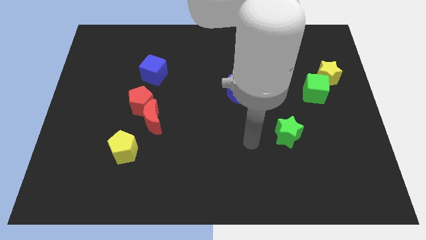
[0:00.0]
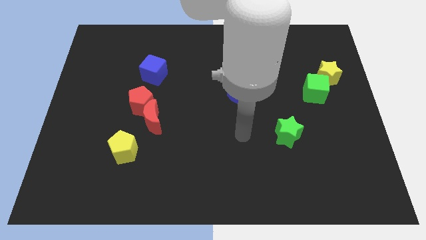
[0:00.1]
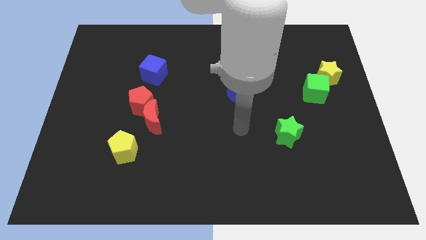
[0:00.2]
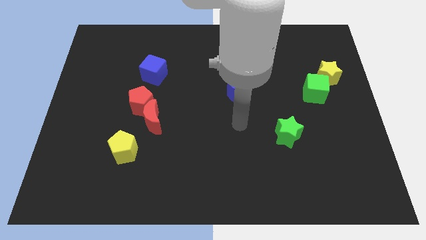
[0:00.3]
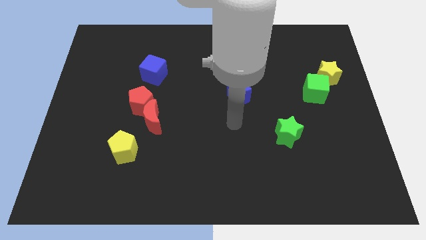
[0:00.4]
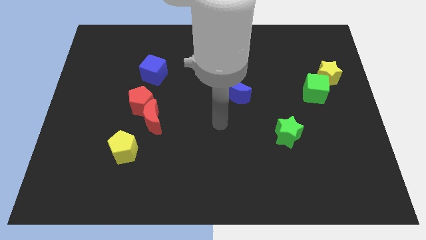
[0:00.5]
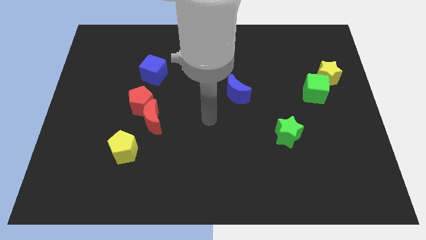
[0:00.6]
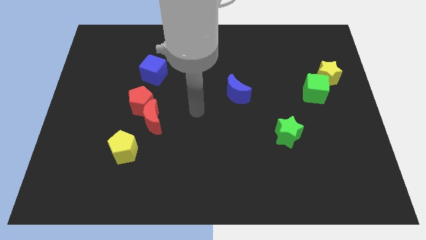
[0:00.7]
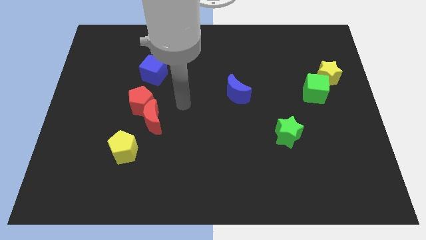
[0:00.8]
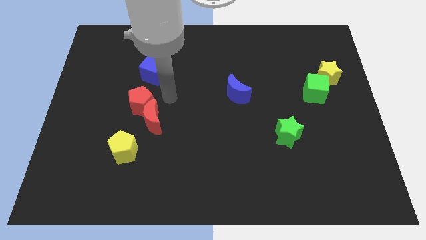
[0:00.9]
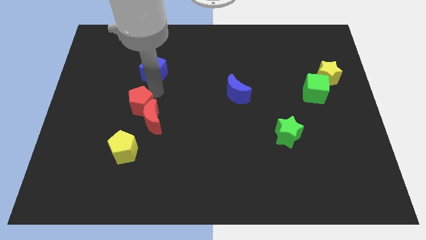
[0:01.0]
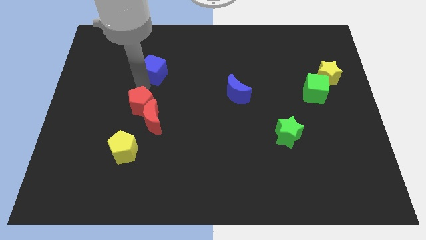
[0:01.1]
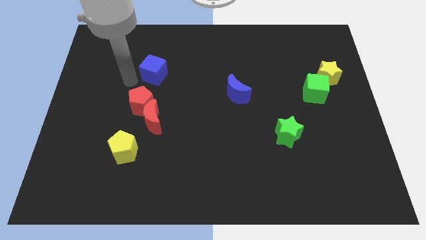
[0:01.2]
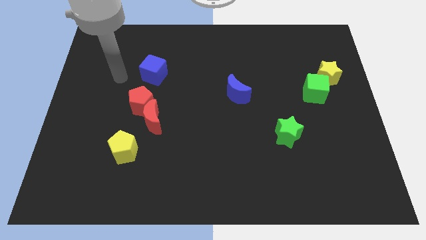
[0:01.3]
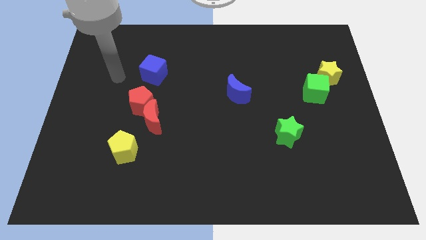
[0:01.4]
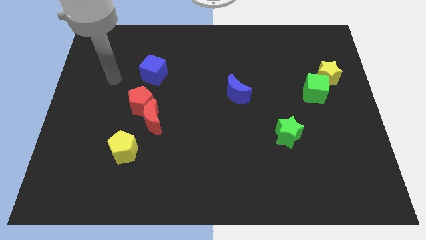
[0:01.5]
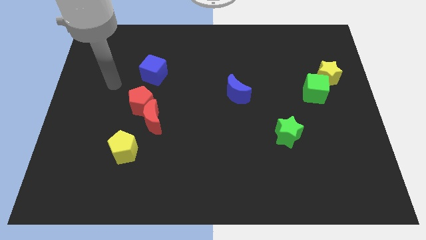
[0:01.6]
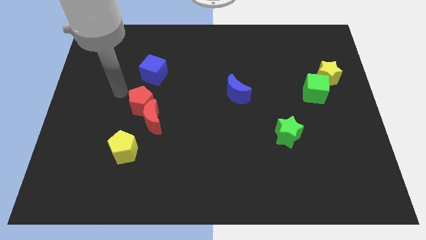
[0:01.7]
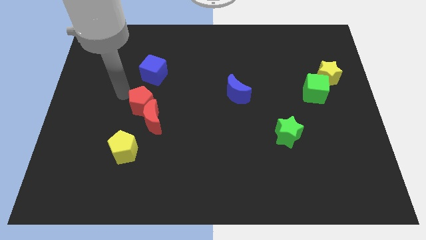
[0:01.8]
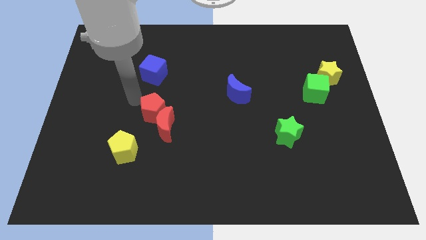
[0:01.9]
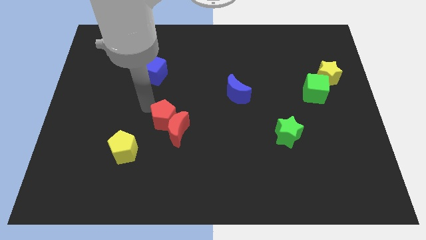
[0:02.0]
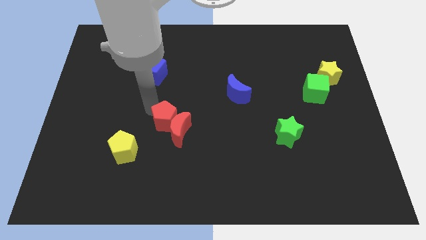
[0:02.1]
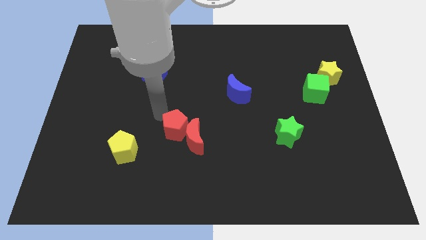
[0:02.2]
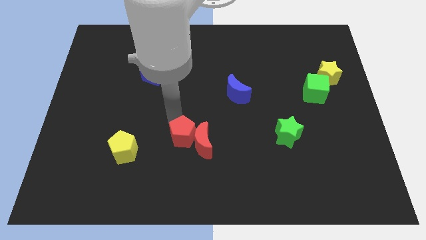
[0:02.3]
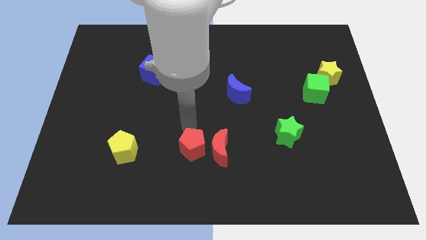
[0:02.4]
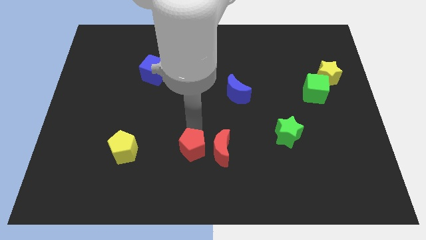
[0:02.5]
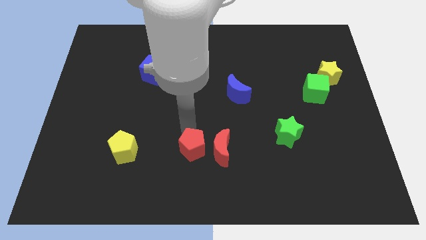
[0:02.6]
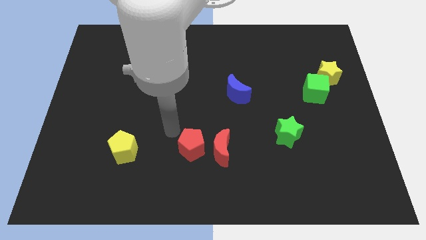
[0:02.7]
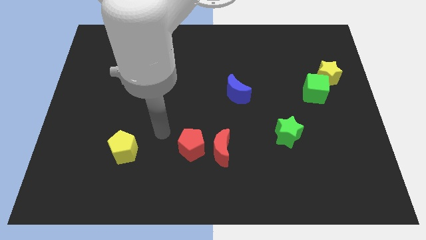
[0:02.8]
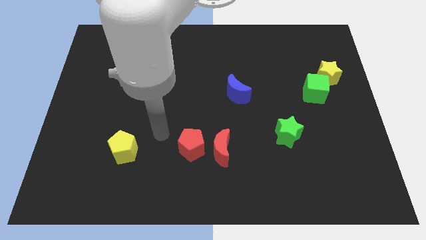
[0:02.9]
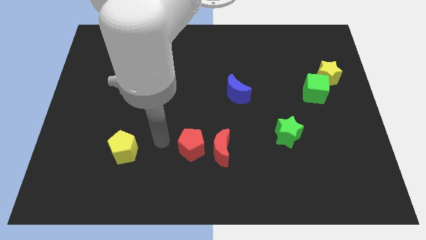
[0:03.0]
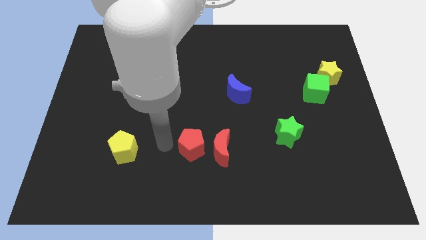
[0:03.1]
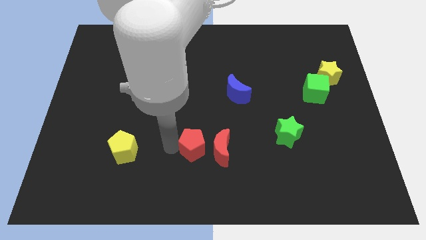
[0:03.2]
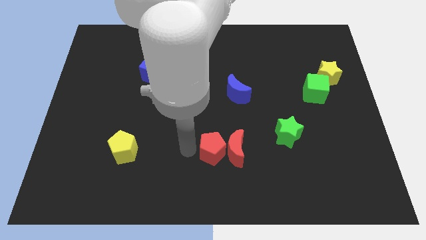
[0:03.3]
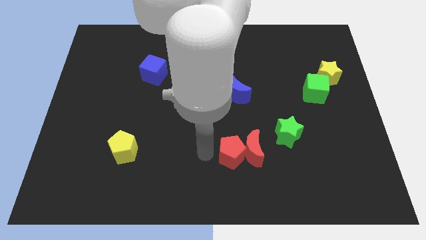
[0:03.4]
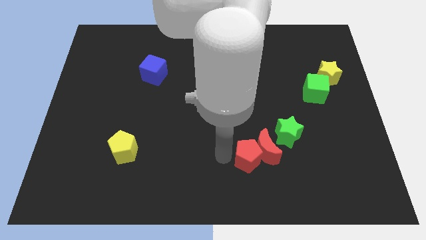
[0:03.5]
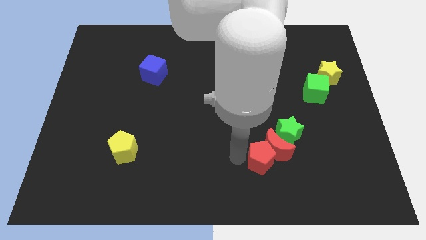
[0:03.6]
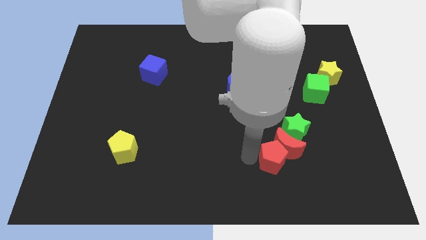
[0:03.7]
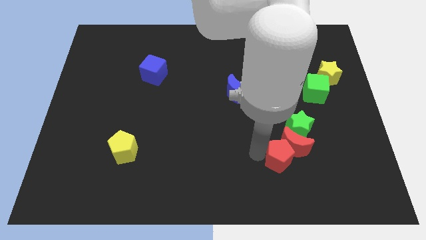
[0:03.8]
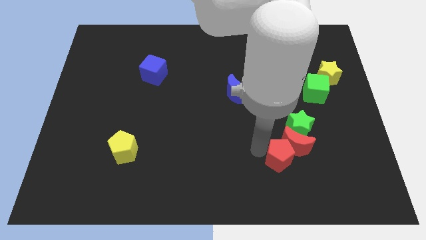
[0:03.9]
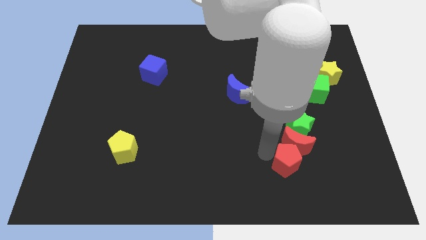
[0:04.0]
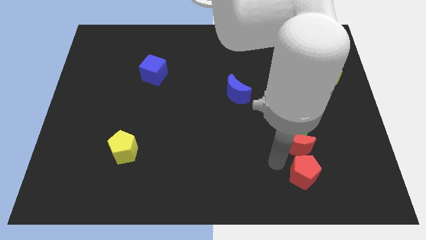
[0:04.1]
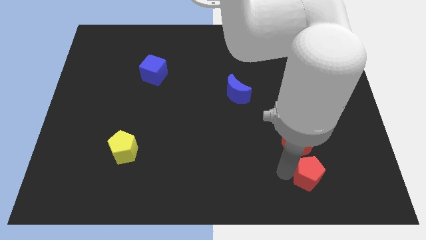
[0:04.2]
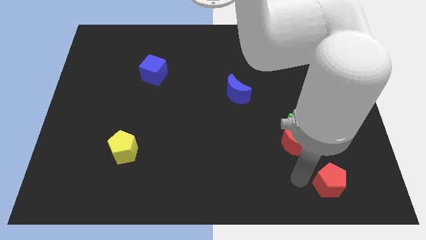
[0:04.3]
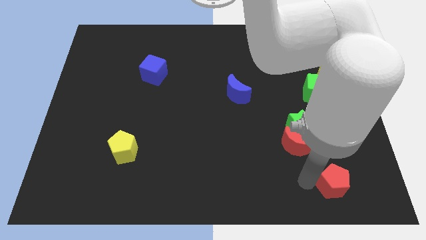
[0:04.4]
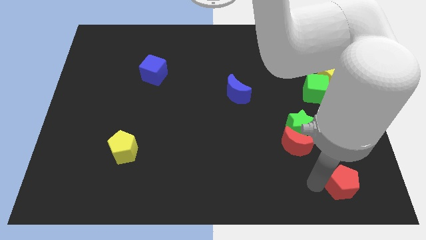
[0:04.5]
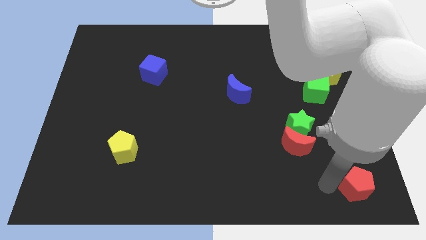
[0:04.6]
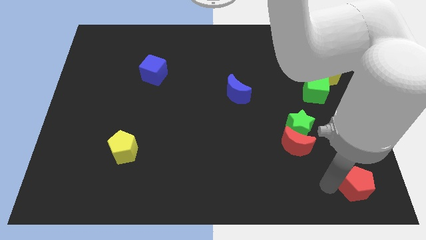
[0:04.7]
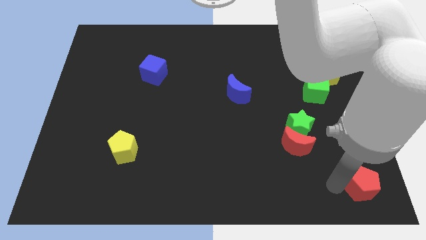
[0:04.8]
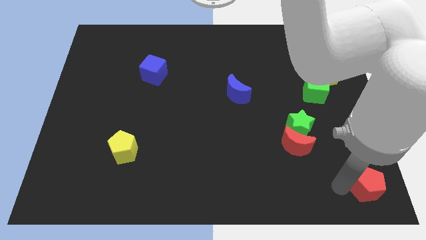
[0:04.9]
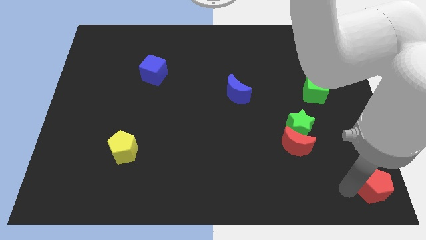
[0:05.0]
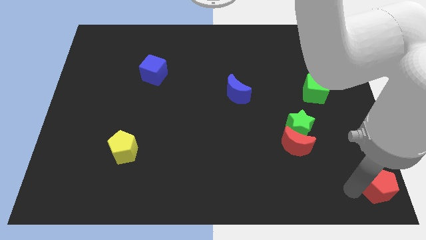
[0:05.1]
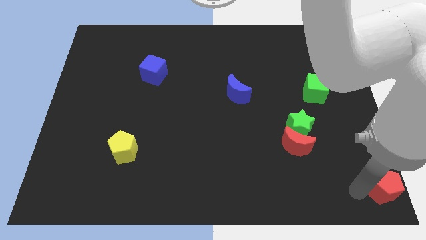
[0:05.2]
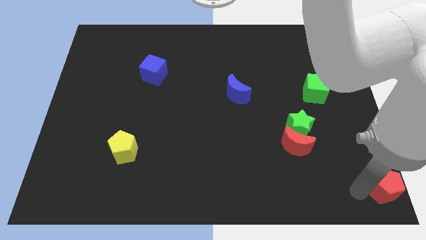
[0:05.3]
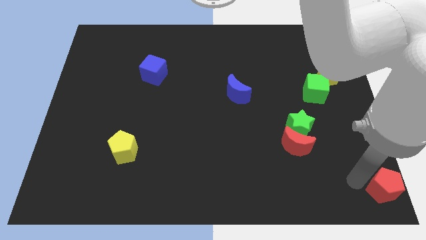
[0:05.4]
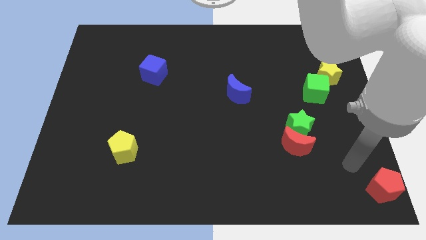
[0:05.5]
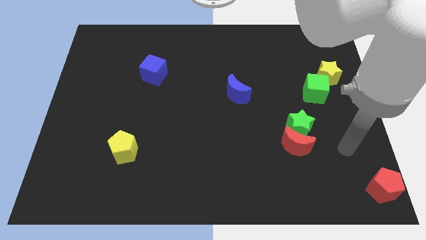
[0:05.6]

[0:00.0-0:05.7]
move the red pentagon towards the bottom right side of the board

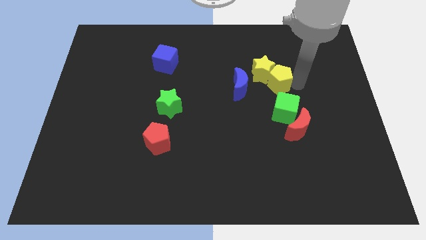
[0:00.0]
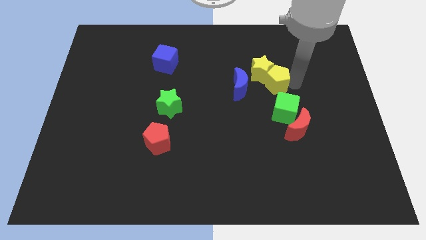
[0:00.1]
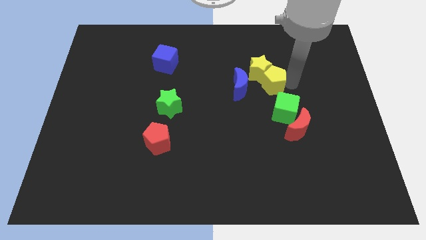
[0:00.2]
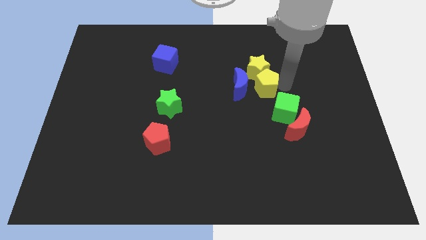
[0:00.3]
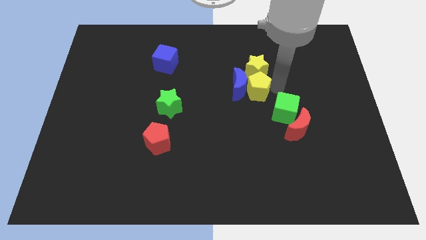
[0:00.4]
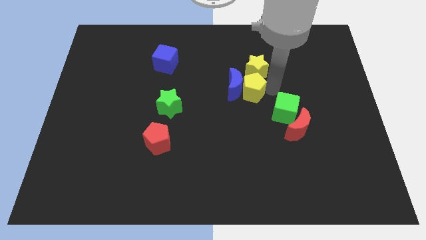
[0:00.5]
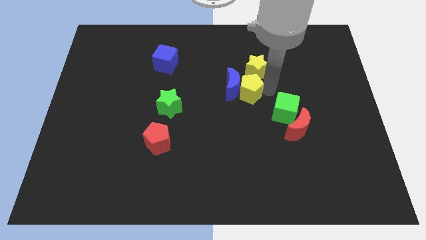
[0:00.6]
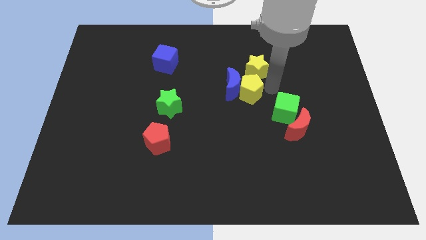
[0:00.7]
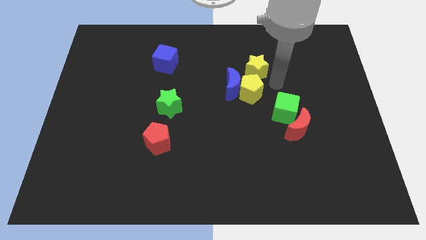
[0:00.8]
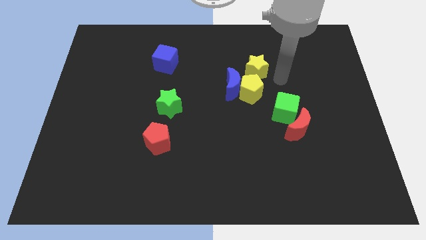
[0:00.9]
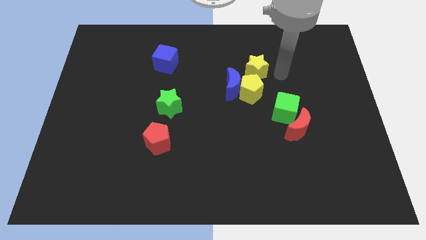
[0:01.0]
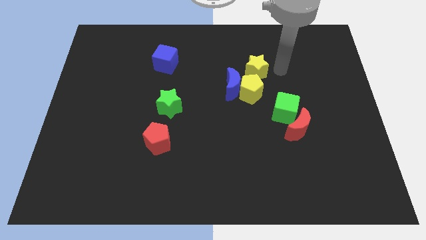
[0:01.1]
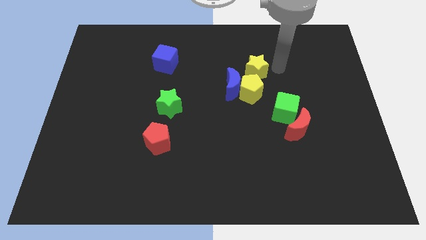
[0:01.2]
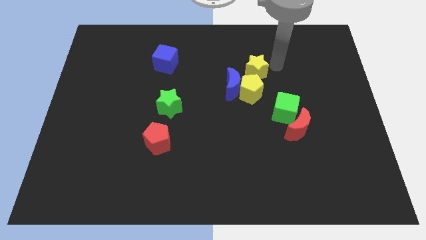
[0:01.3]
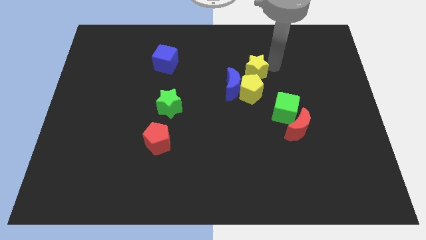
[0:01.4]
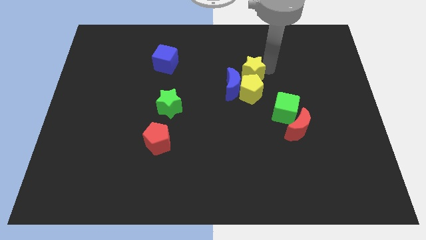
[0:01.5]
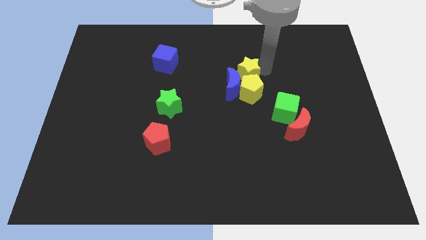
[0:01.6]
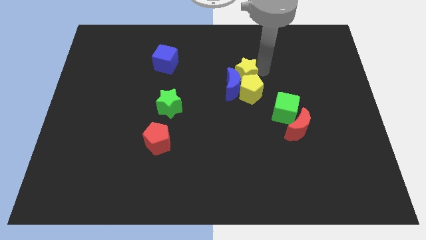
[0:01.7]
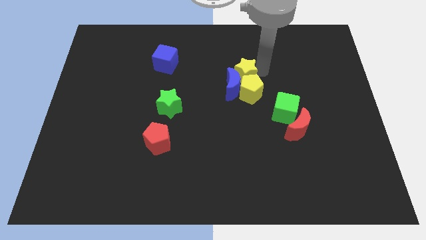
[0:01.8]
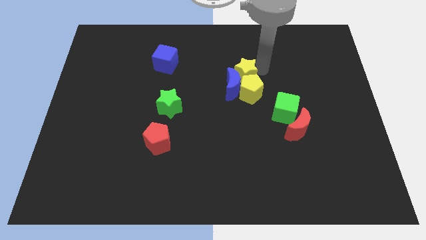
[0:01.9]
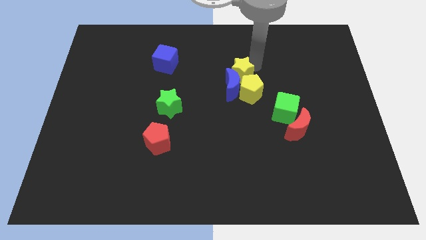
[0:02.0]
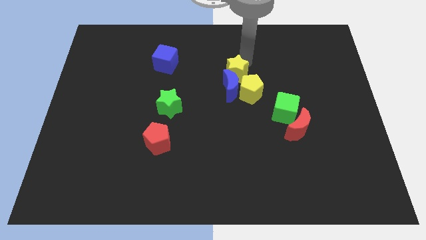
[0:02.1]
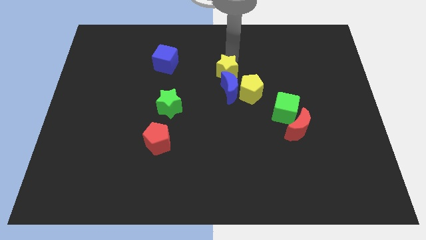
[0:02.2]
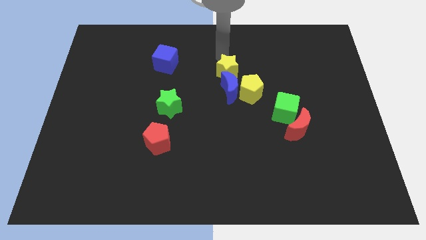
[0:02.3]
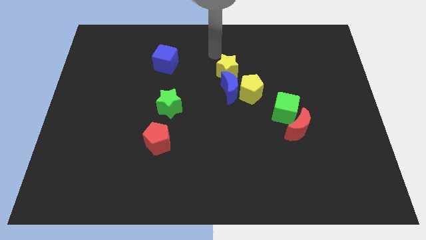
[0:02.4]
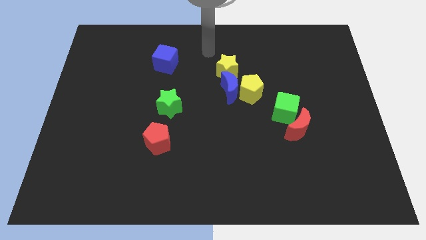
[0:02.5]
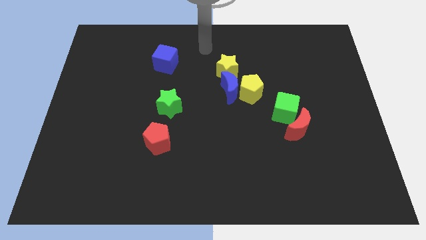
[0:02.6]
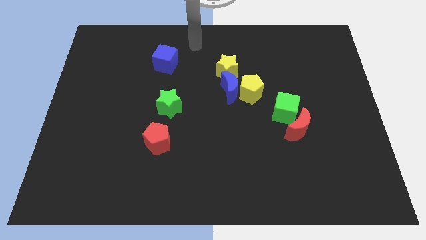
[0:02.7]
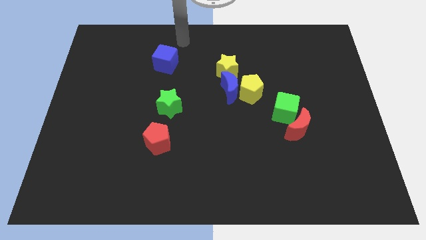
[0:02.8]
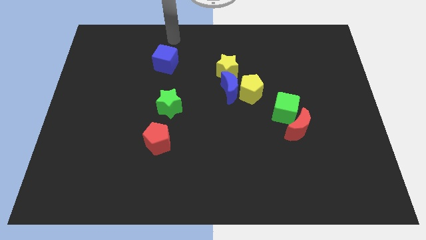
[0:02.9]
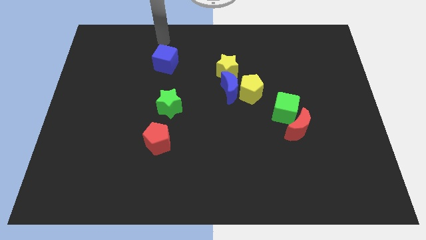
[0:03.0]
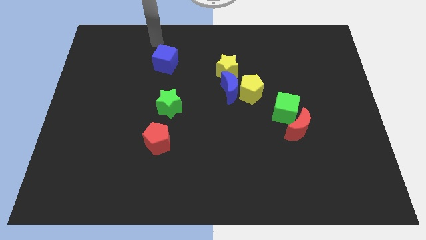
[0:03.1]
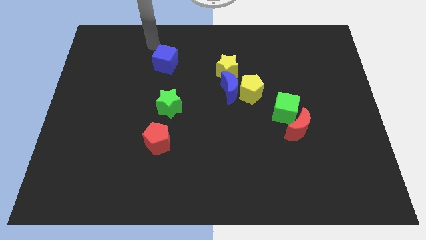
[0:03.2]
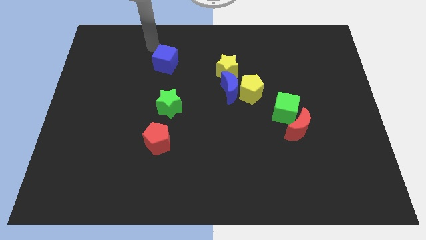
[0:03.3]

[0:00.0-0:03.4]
place the arm near the blue cube
